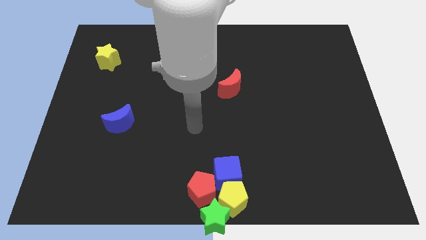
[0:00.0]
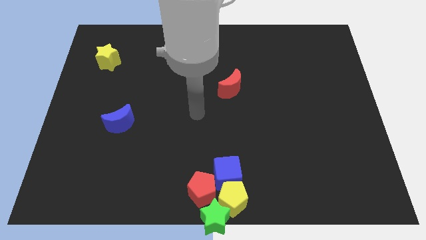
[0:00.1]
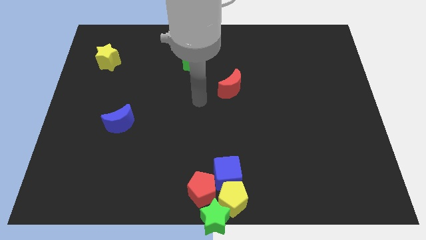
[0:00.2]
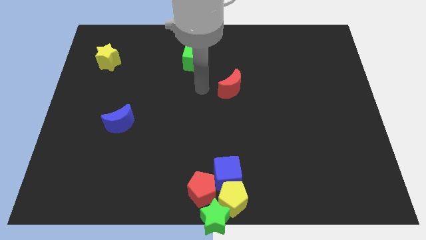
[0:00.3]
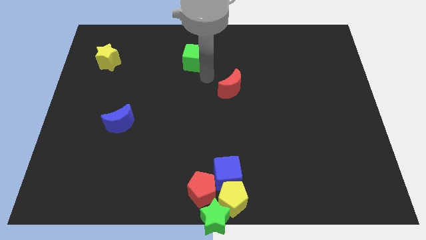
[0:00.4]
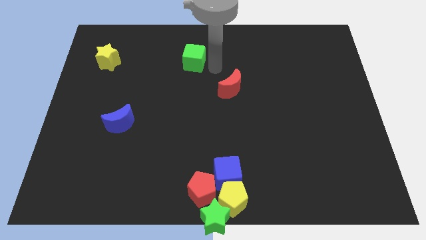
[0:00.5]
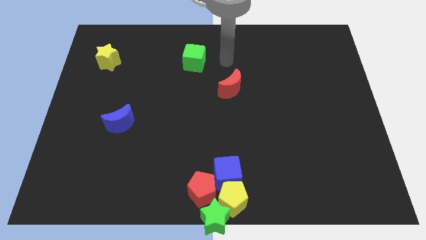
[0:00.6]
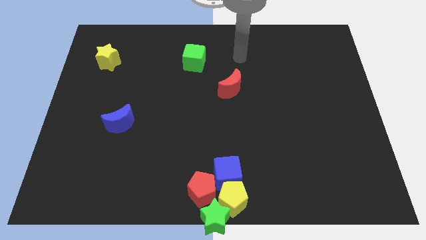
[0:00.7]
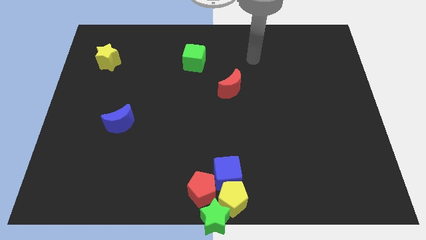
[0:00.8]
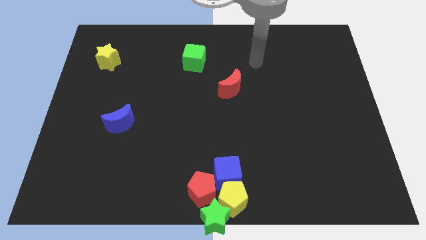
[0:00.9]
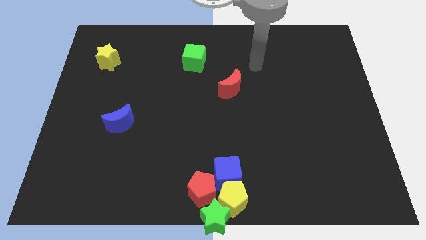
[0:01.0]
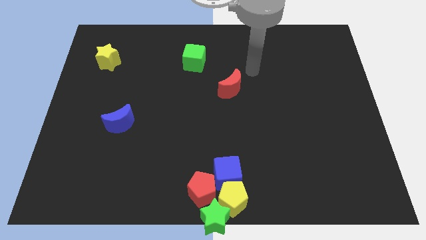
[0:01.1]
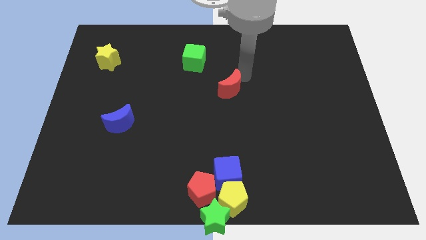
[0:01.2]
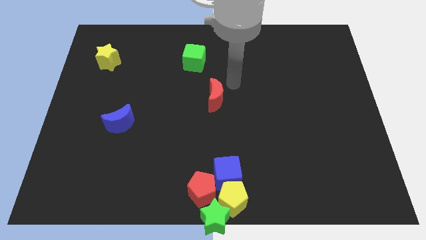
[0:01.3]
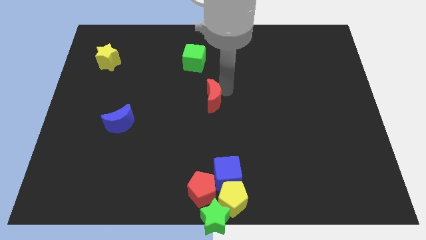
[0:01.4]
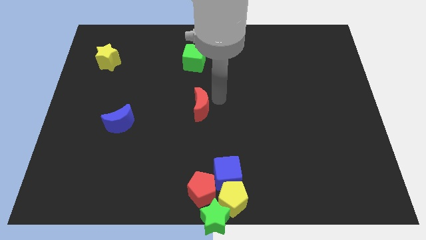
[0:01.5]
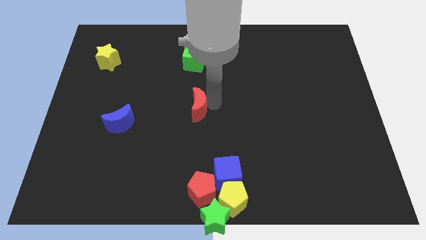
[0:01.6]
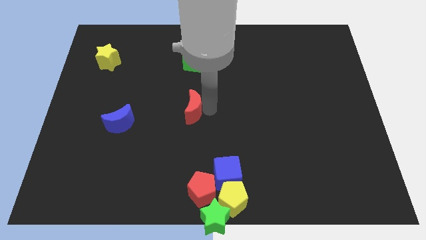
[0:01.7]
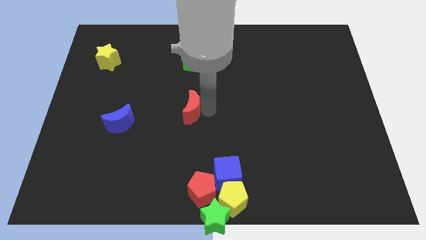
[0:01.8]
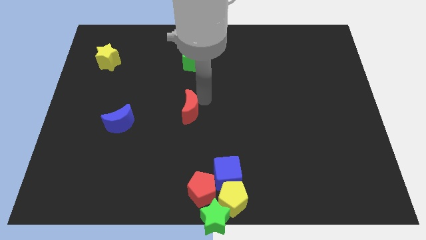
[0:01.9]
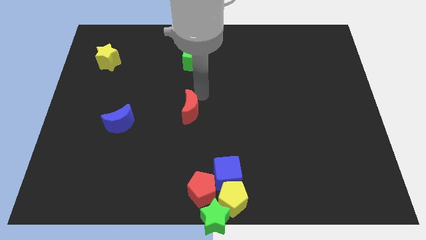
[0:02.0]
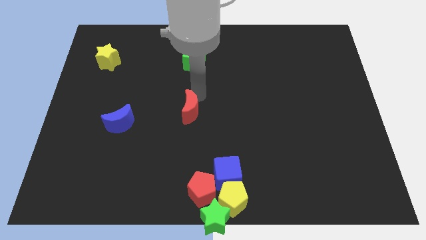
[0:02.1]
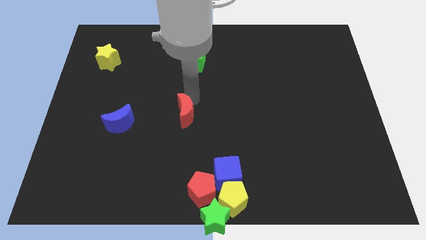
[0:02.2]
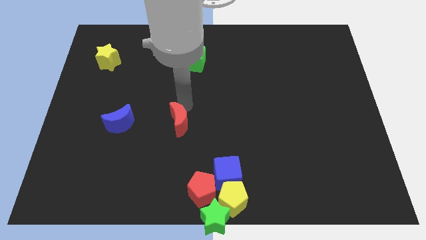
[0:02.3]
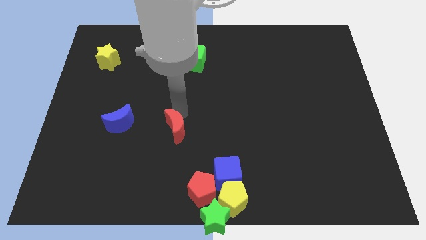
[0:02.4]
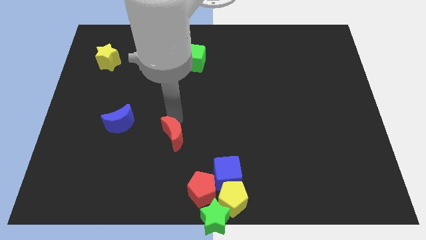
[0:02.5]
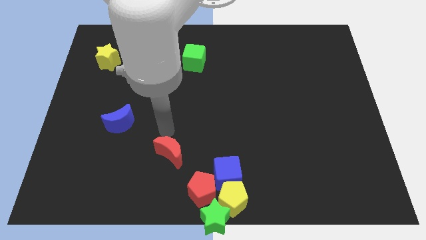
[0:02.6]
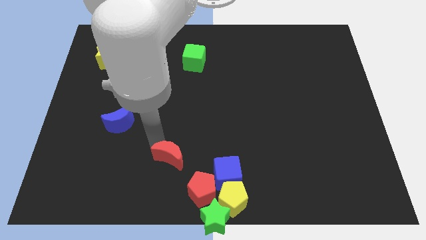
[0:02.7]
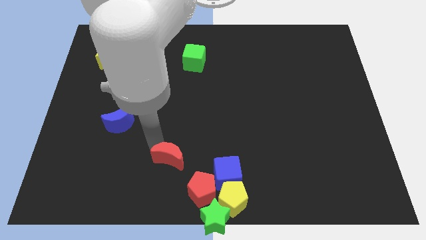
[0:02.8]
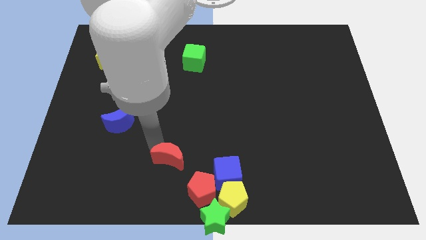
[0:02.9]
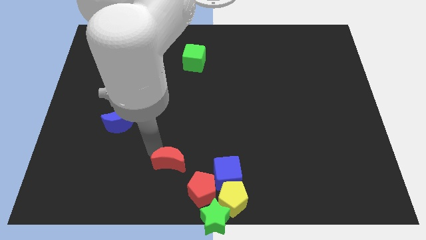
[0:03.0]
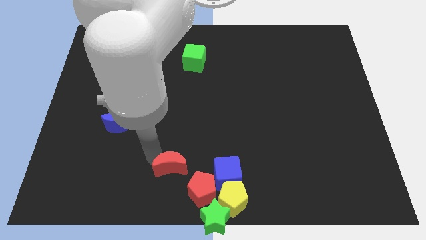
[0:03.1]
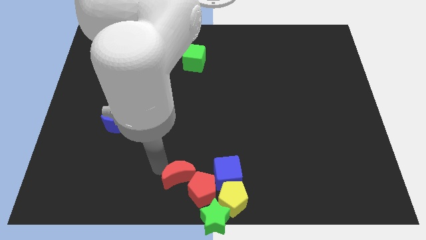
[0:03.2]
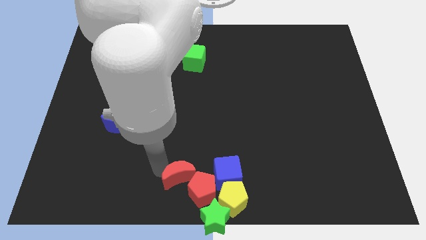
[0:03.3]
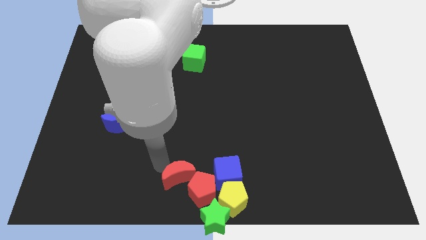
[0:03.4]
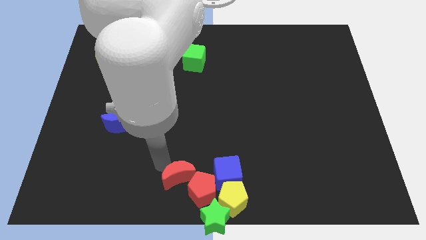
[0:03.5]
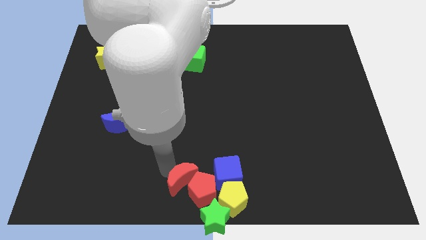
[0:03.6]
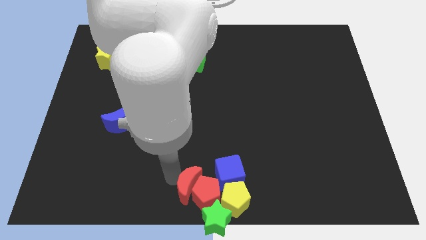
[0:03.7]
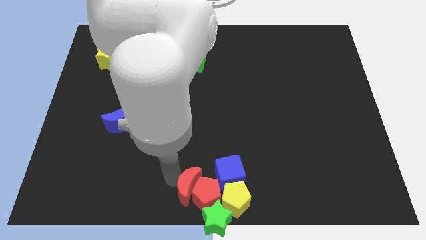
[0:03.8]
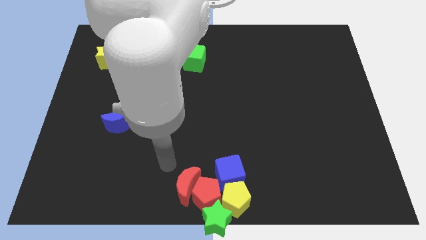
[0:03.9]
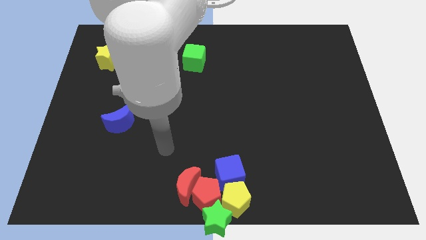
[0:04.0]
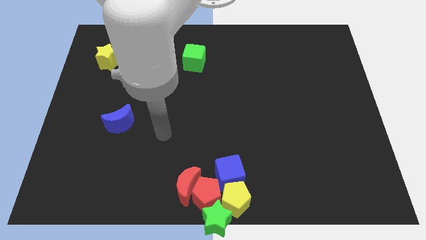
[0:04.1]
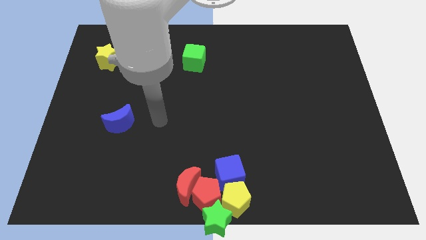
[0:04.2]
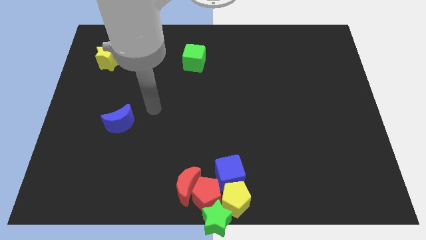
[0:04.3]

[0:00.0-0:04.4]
move the red moon into the group of blocks at the bottom center

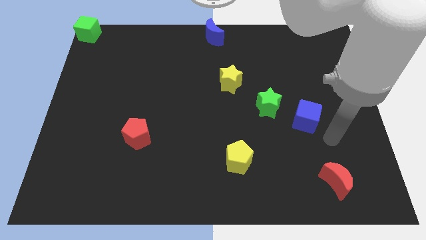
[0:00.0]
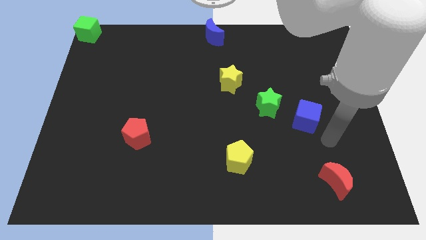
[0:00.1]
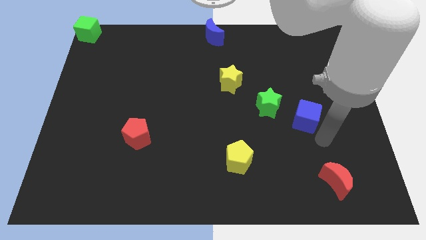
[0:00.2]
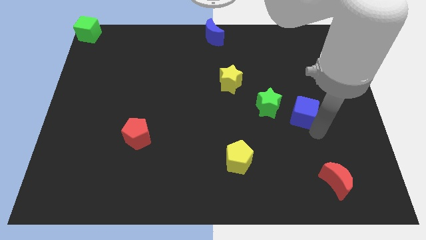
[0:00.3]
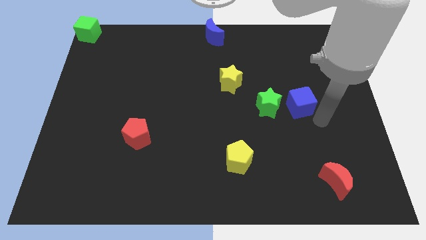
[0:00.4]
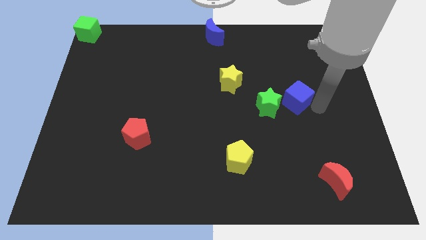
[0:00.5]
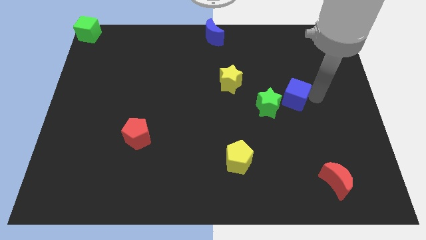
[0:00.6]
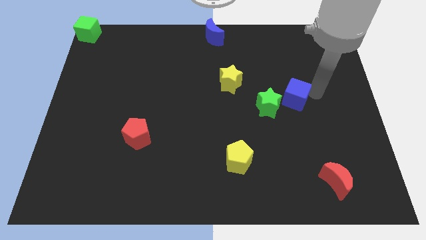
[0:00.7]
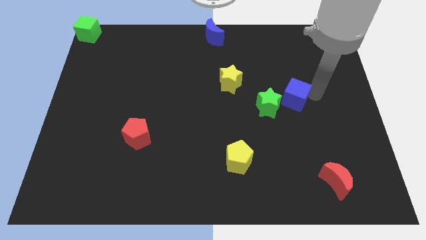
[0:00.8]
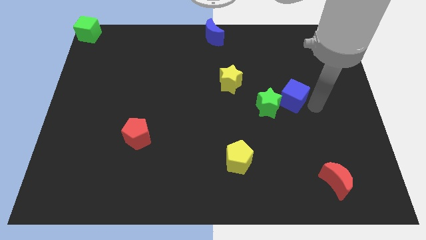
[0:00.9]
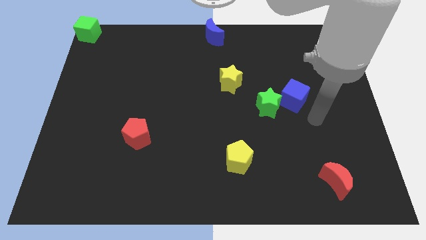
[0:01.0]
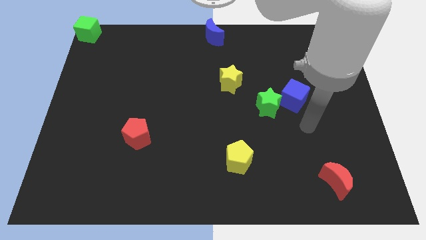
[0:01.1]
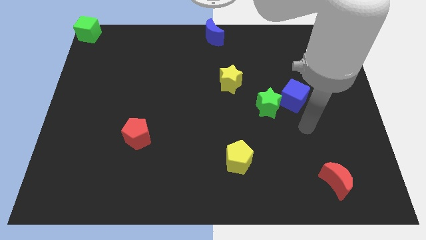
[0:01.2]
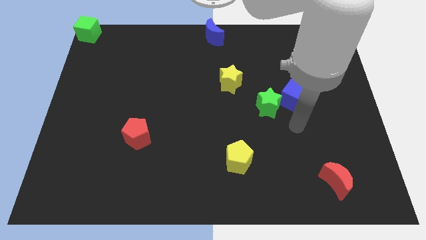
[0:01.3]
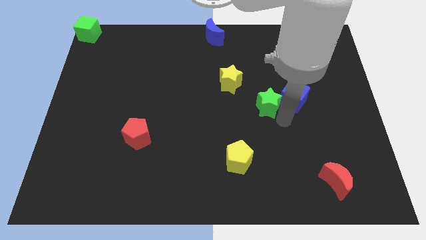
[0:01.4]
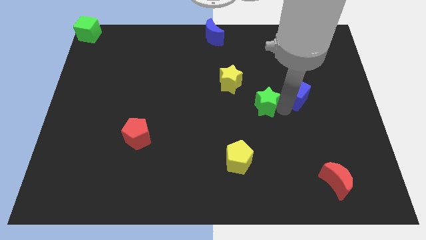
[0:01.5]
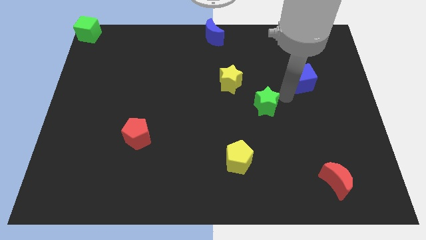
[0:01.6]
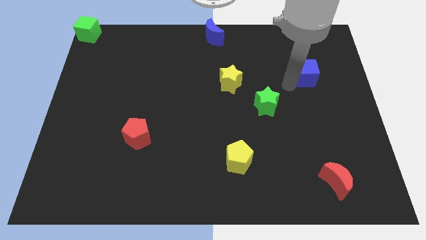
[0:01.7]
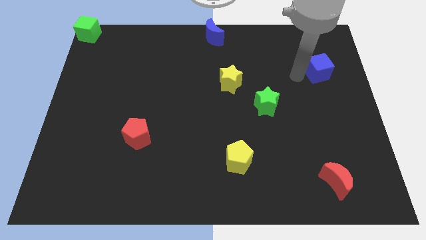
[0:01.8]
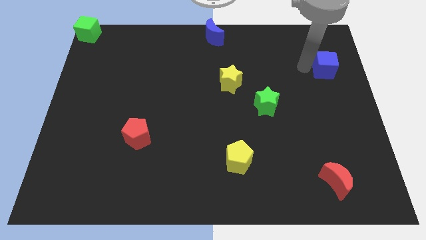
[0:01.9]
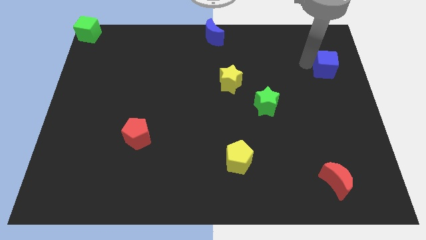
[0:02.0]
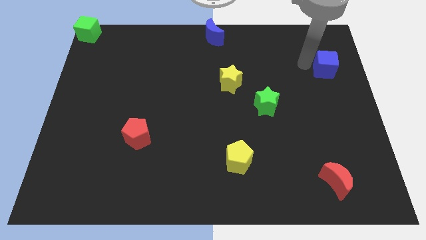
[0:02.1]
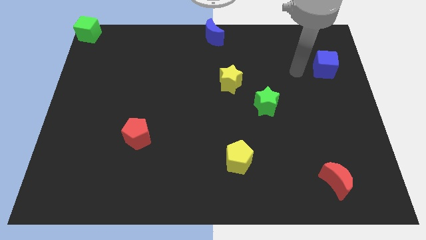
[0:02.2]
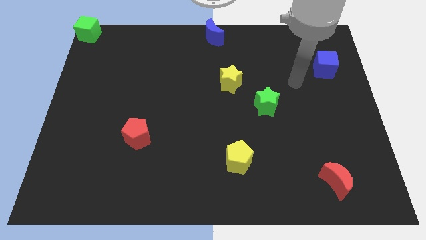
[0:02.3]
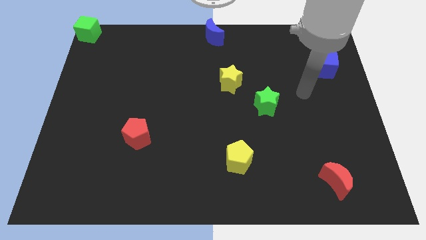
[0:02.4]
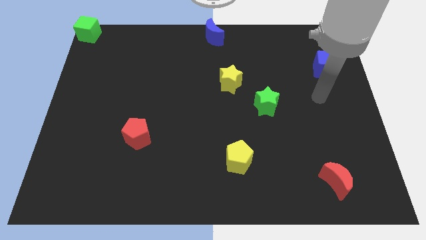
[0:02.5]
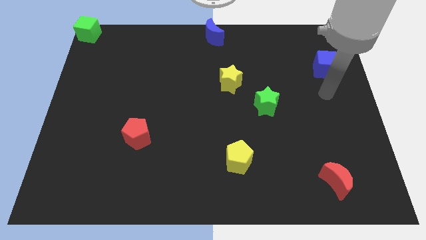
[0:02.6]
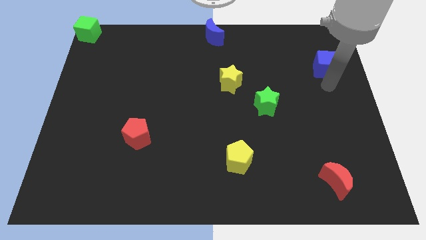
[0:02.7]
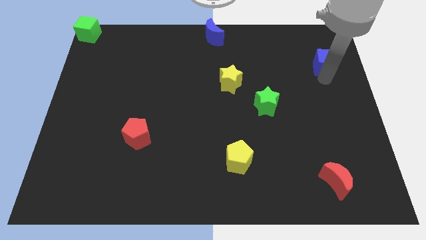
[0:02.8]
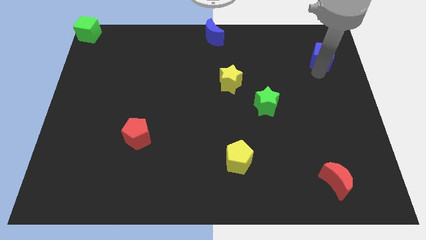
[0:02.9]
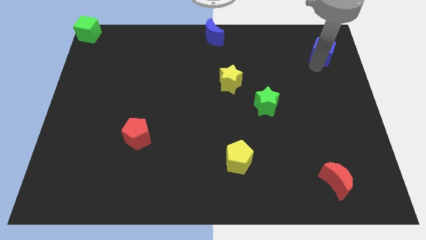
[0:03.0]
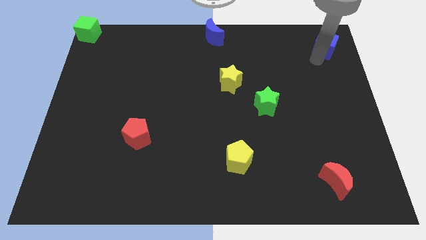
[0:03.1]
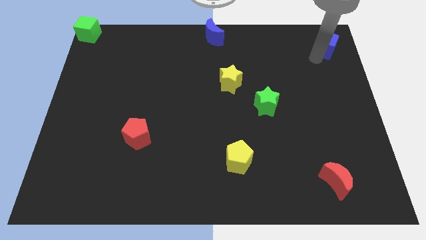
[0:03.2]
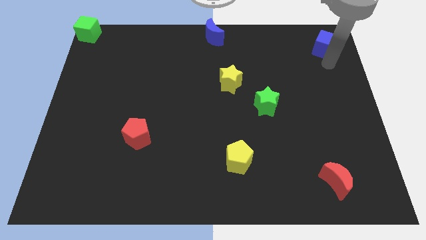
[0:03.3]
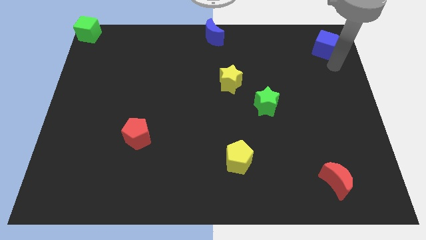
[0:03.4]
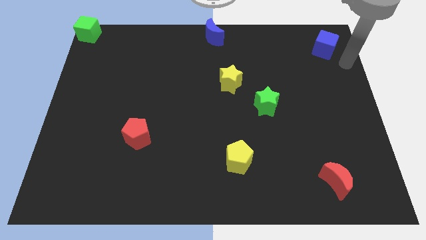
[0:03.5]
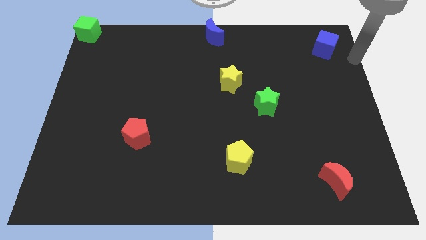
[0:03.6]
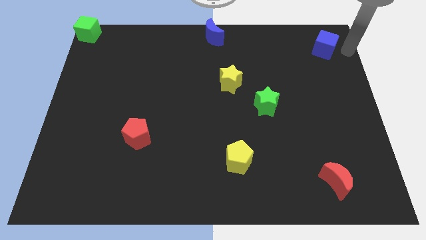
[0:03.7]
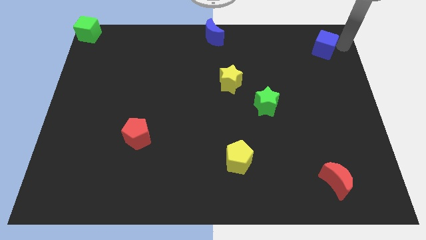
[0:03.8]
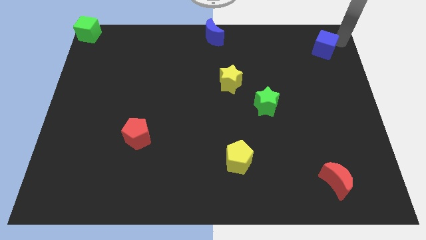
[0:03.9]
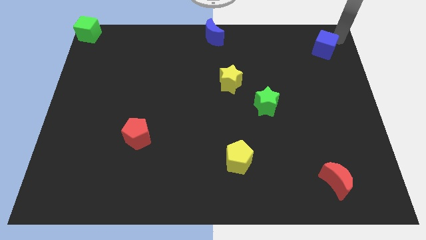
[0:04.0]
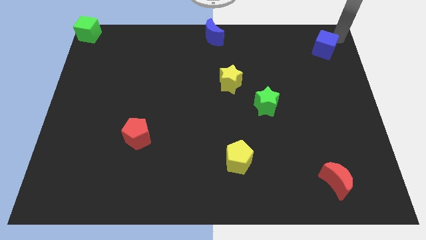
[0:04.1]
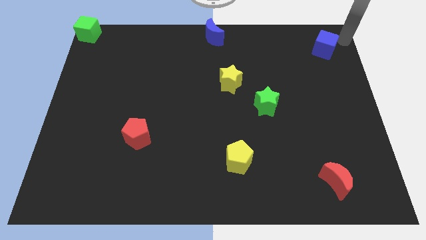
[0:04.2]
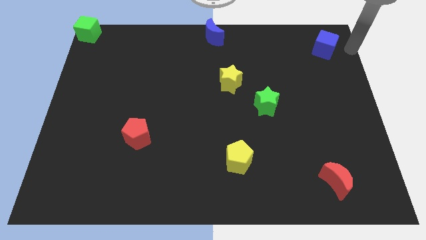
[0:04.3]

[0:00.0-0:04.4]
push the blue cube towards the top

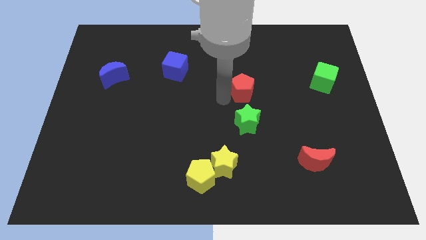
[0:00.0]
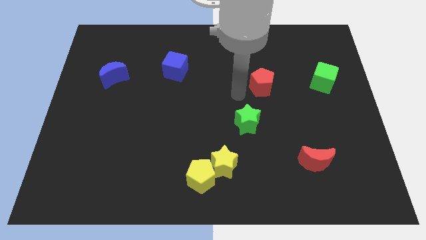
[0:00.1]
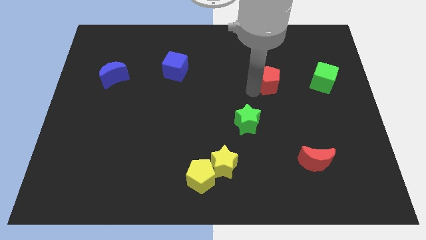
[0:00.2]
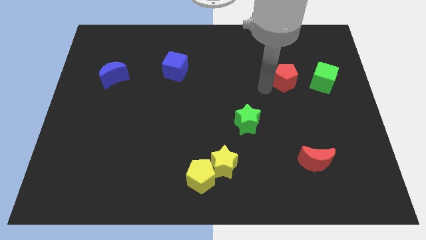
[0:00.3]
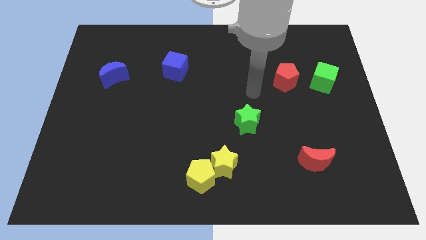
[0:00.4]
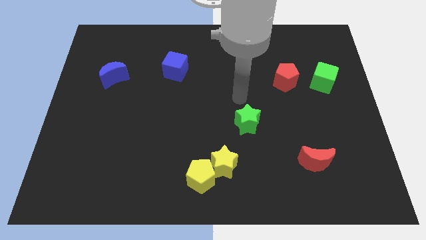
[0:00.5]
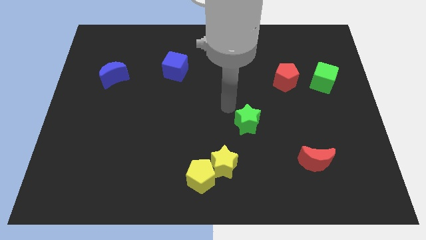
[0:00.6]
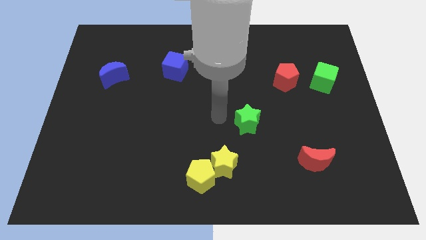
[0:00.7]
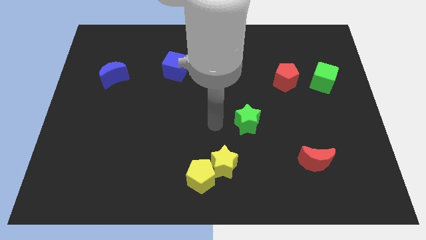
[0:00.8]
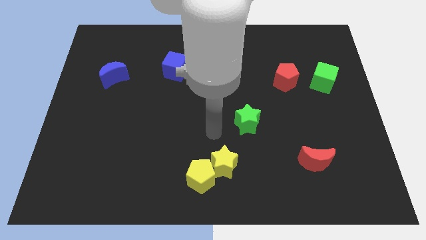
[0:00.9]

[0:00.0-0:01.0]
push the red pentagon to the left of the green cube
